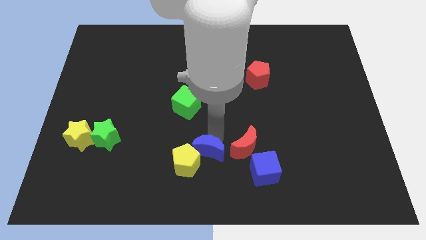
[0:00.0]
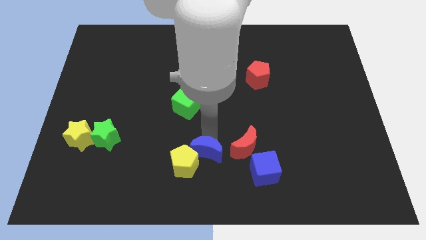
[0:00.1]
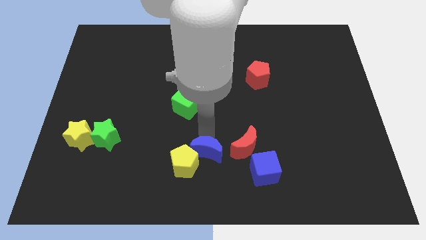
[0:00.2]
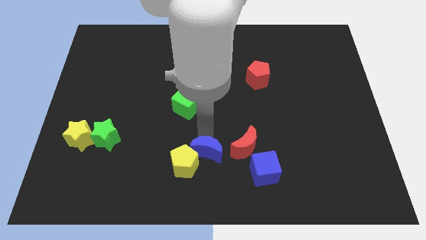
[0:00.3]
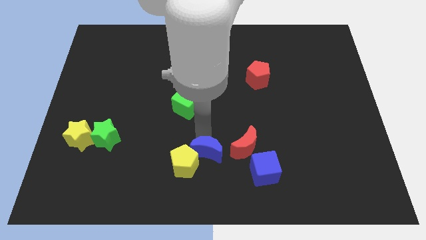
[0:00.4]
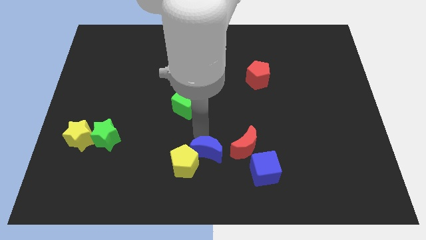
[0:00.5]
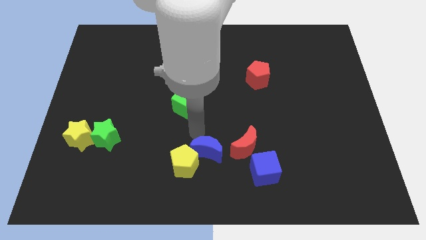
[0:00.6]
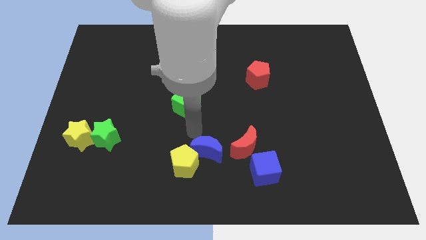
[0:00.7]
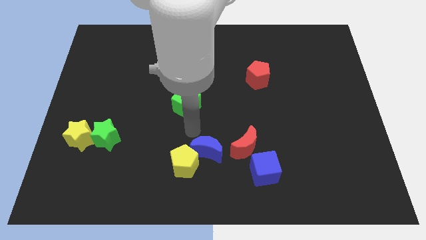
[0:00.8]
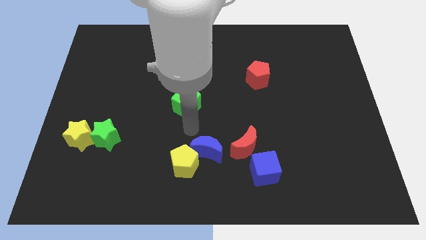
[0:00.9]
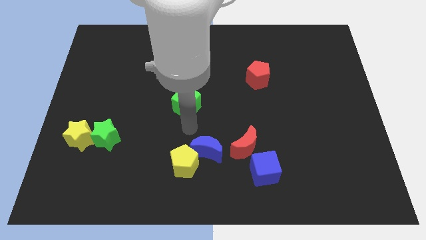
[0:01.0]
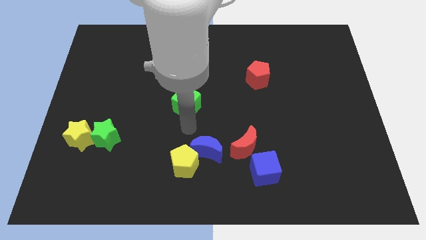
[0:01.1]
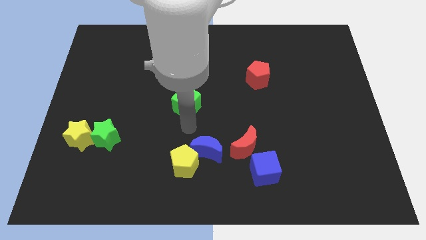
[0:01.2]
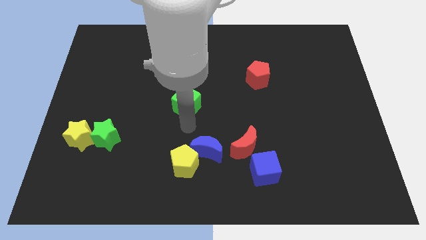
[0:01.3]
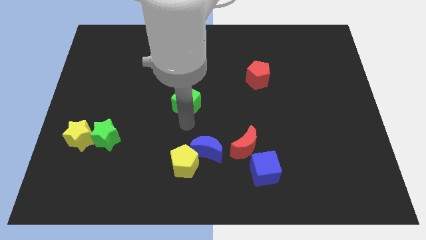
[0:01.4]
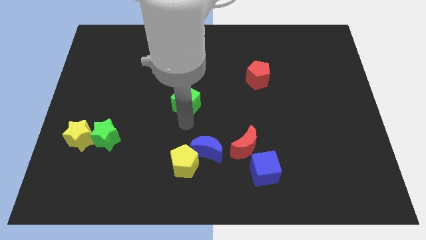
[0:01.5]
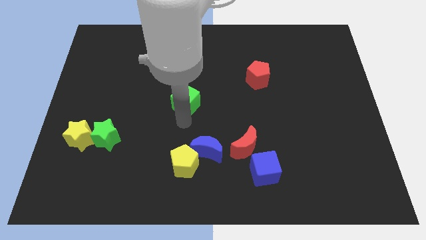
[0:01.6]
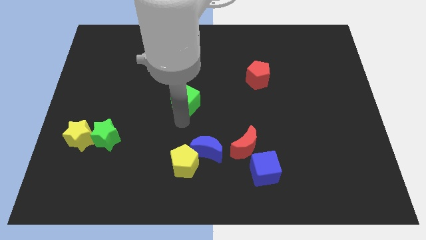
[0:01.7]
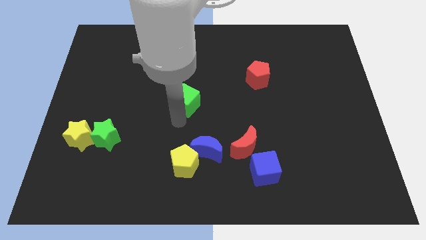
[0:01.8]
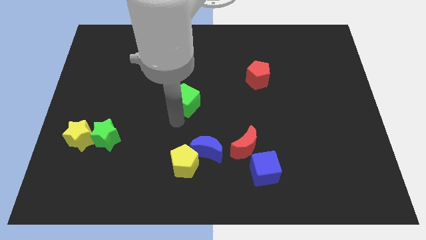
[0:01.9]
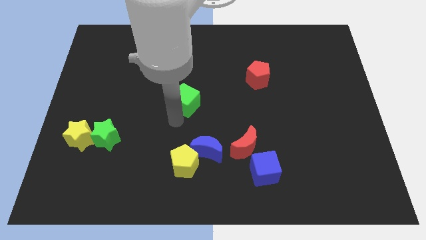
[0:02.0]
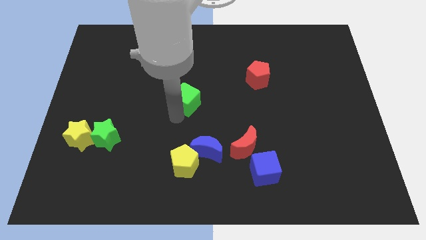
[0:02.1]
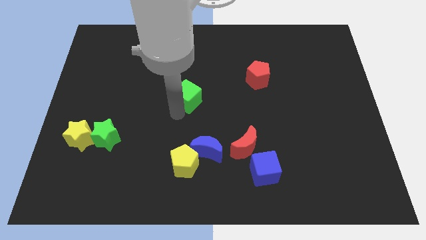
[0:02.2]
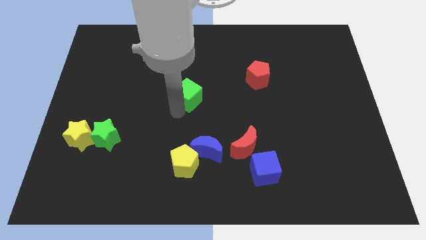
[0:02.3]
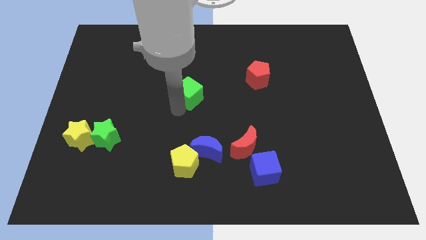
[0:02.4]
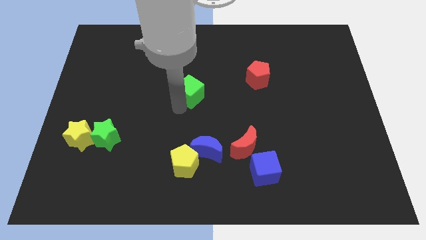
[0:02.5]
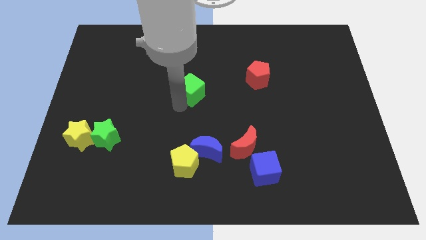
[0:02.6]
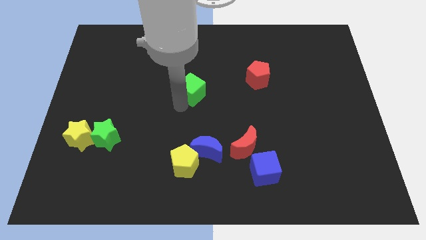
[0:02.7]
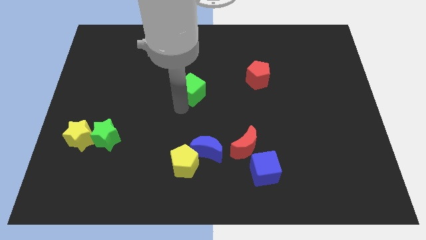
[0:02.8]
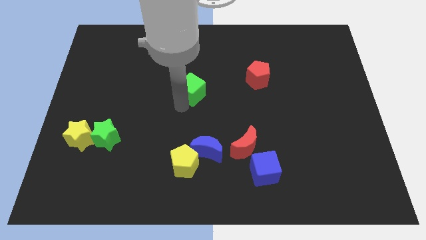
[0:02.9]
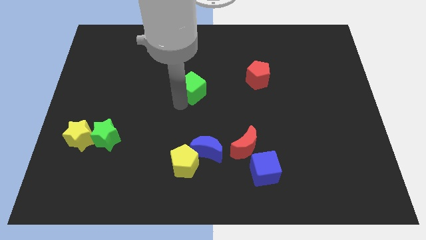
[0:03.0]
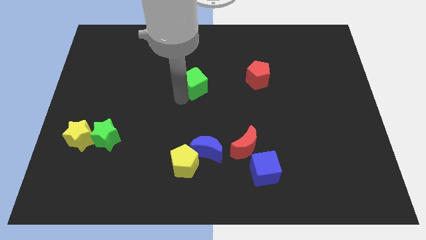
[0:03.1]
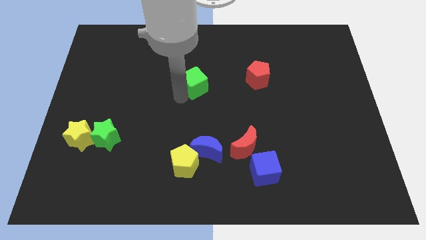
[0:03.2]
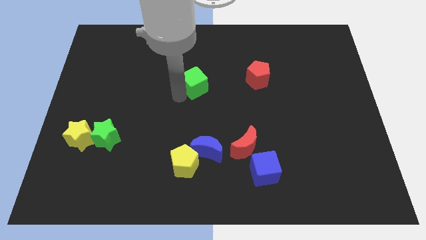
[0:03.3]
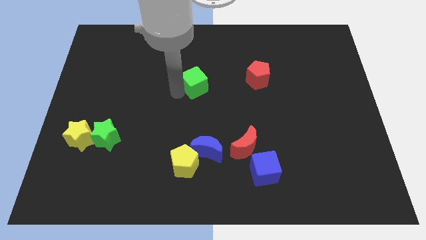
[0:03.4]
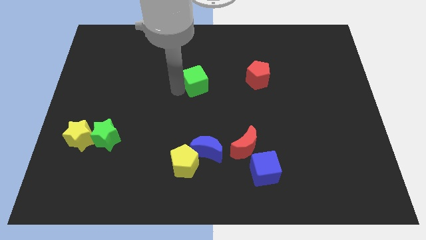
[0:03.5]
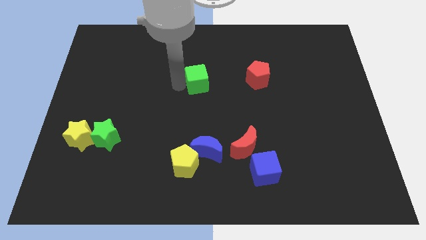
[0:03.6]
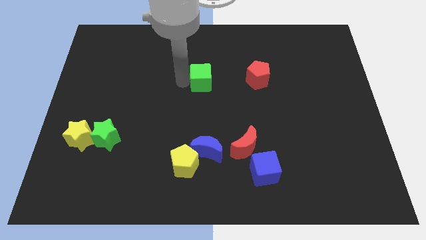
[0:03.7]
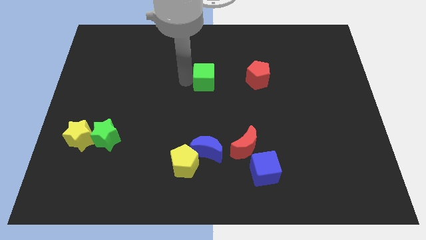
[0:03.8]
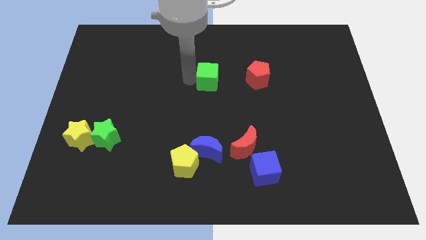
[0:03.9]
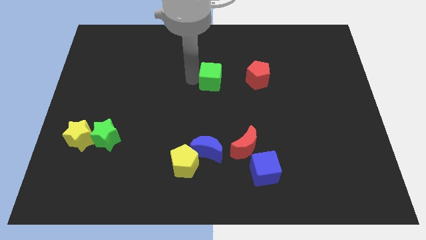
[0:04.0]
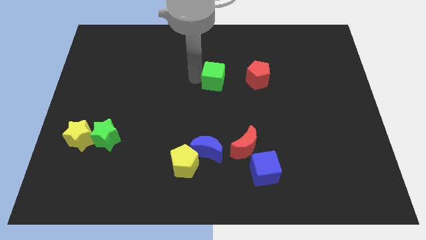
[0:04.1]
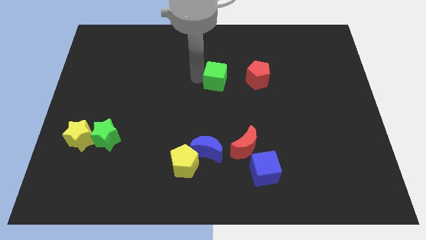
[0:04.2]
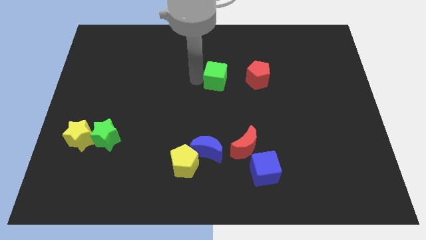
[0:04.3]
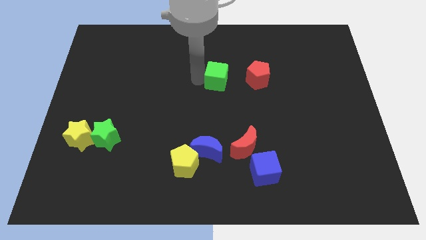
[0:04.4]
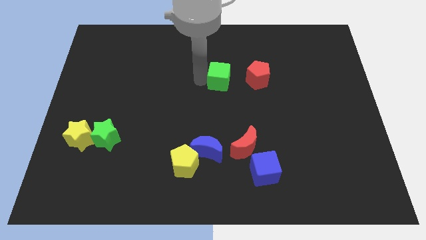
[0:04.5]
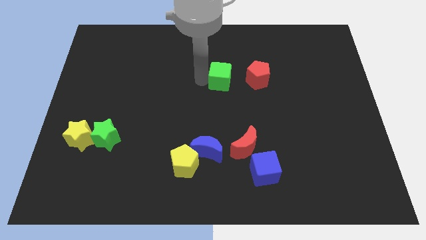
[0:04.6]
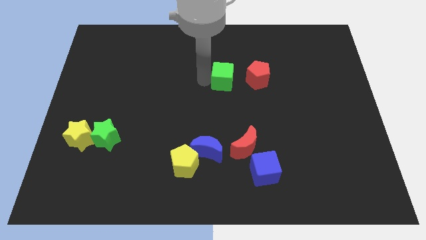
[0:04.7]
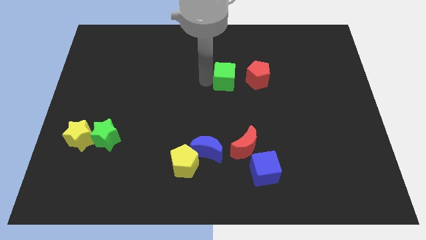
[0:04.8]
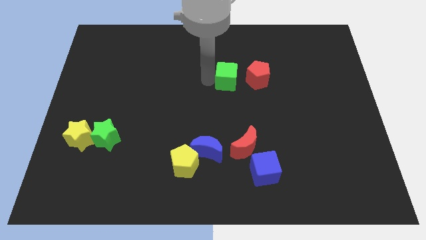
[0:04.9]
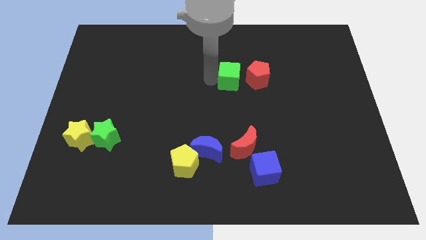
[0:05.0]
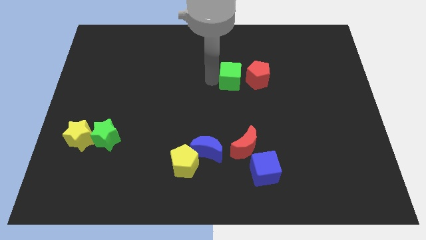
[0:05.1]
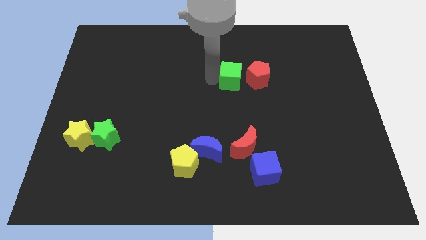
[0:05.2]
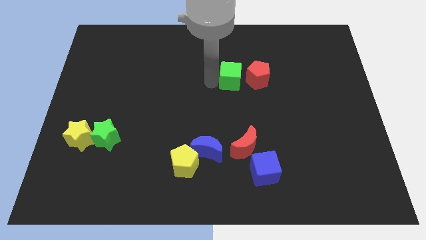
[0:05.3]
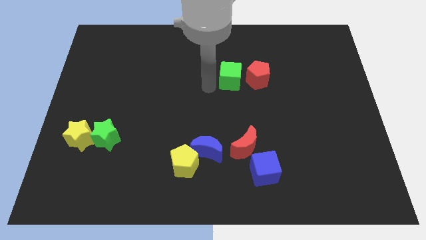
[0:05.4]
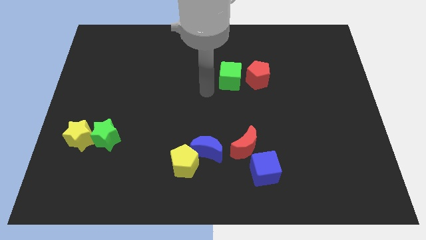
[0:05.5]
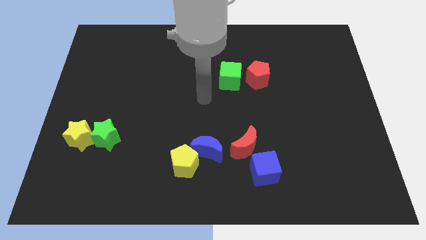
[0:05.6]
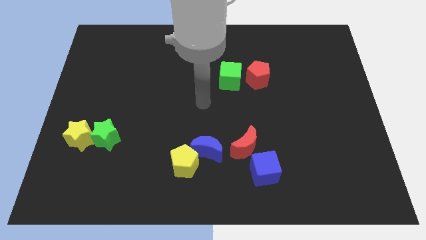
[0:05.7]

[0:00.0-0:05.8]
move the green cube left to the red pentagon

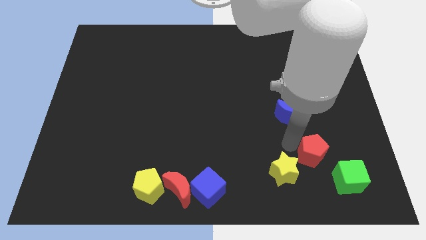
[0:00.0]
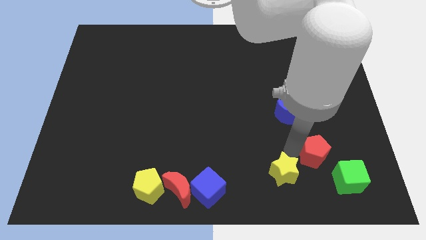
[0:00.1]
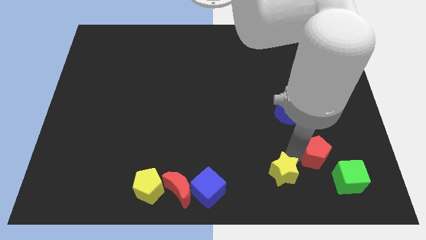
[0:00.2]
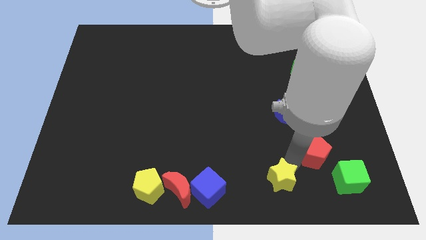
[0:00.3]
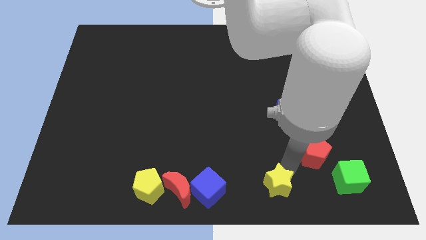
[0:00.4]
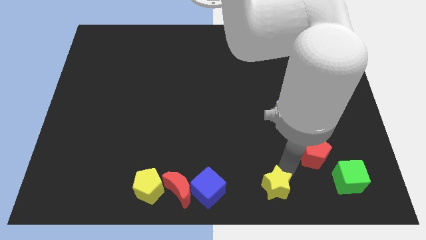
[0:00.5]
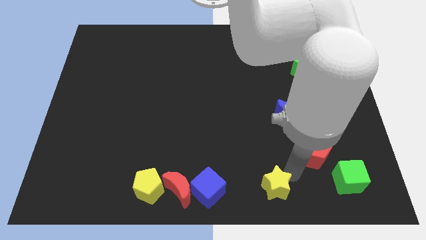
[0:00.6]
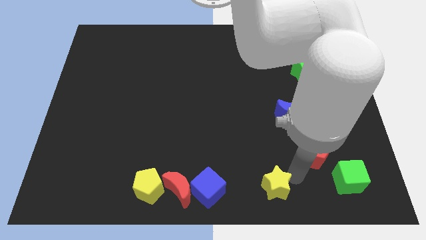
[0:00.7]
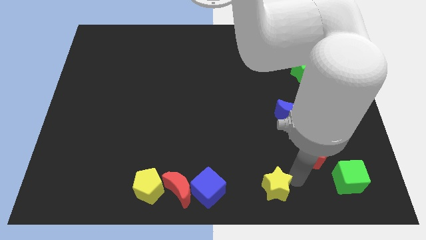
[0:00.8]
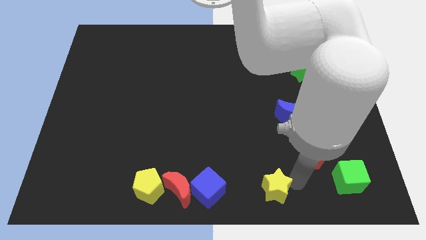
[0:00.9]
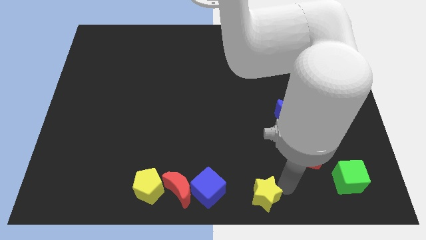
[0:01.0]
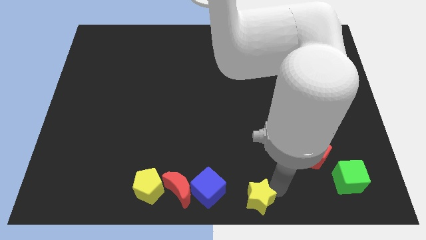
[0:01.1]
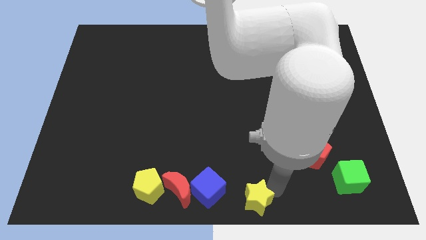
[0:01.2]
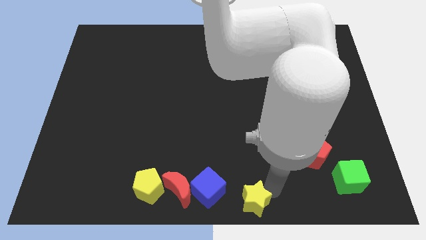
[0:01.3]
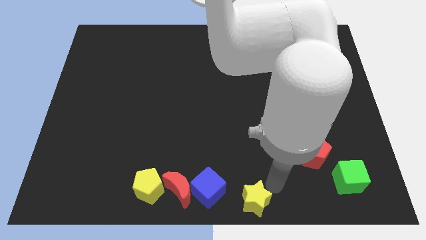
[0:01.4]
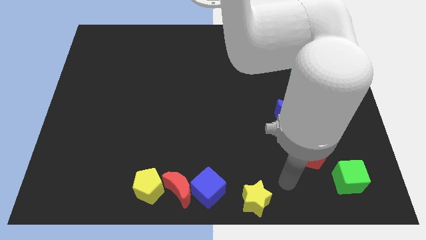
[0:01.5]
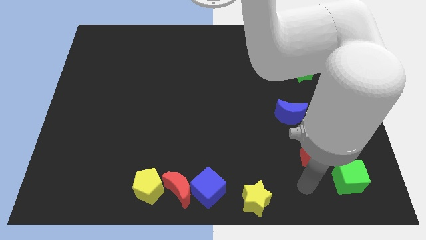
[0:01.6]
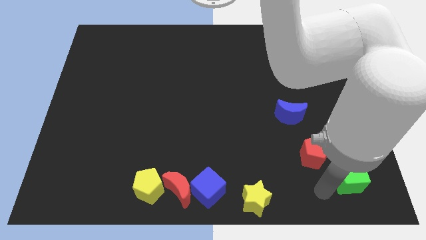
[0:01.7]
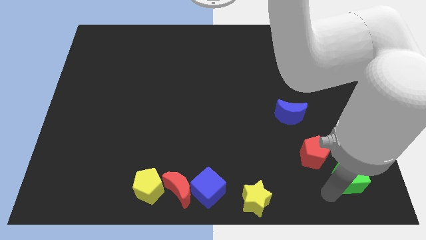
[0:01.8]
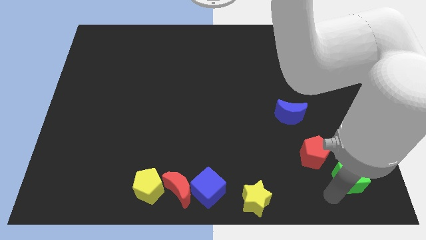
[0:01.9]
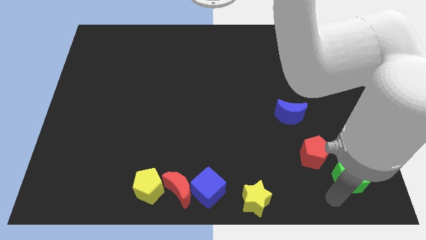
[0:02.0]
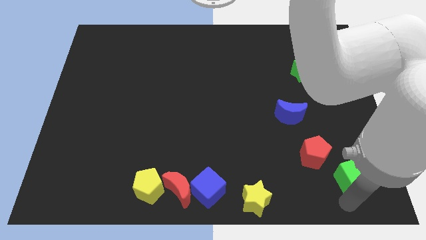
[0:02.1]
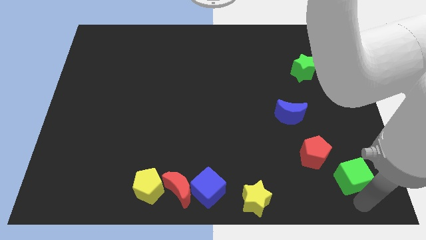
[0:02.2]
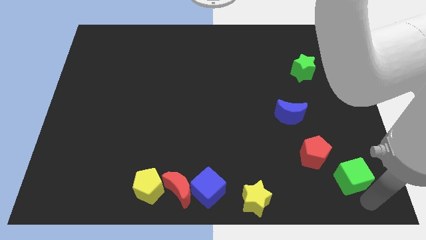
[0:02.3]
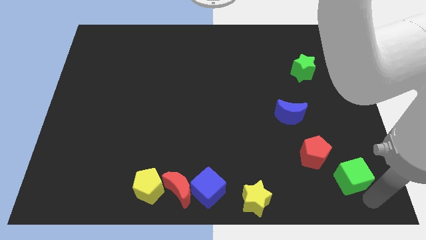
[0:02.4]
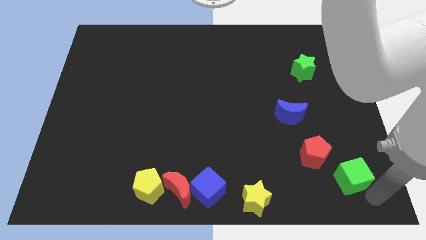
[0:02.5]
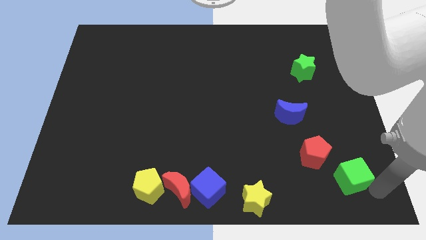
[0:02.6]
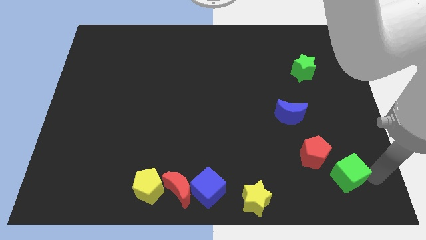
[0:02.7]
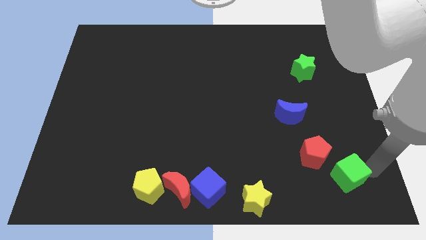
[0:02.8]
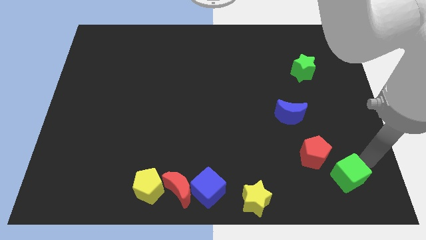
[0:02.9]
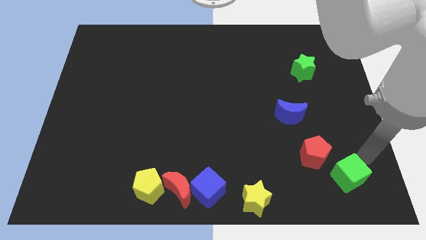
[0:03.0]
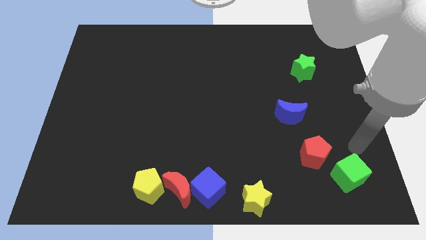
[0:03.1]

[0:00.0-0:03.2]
push the yellow star right to the blue moon
